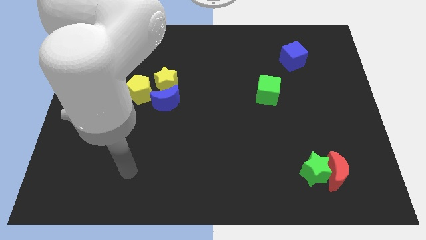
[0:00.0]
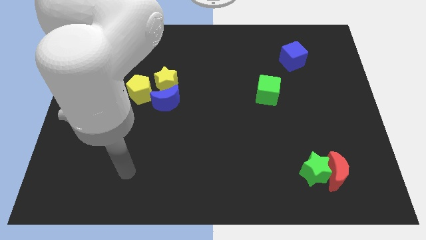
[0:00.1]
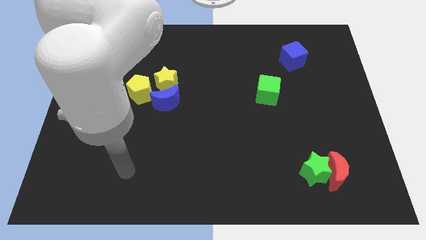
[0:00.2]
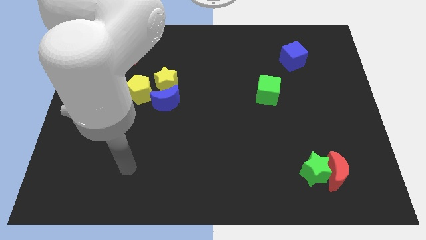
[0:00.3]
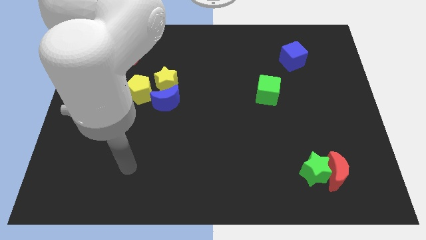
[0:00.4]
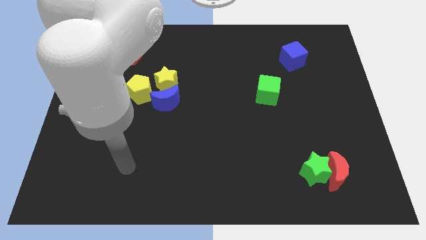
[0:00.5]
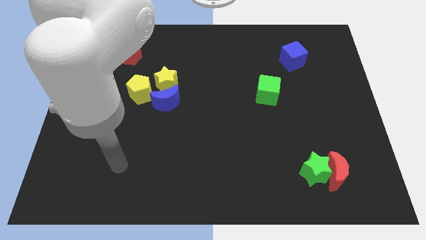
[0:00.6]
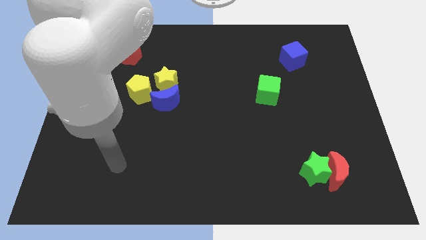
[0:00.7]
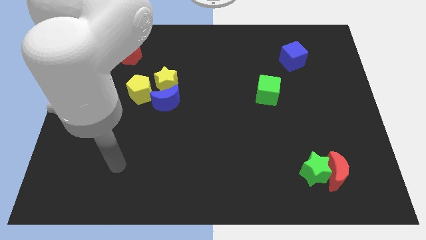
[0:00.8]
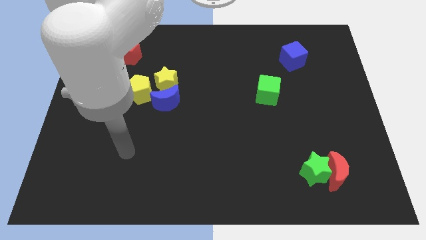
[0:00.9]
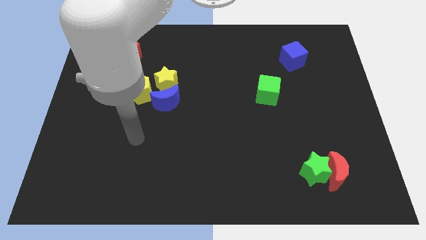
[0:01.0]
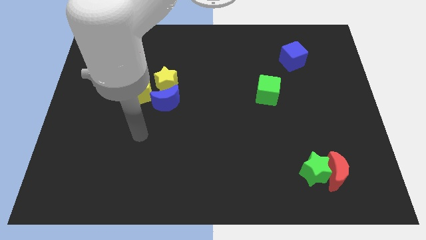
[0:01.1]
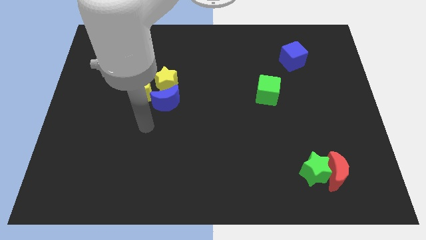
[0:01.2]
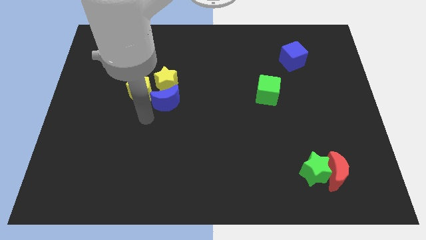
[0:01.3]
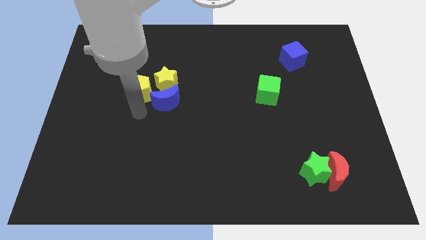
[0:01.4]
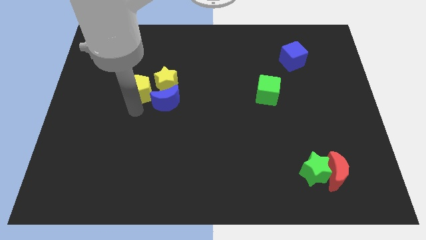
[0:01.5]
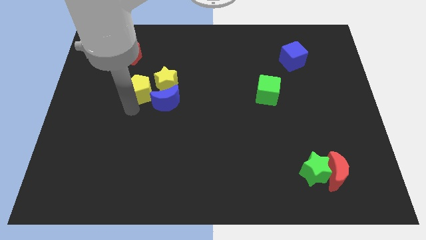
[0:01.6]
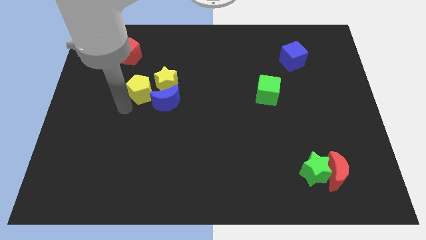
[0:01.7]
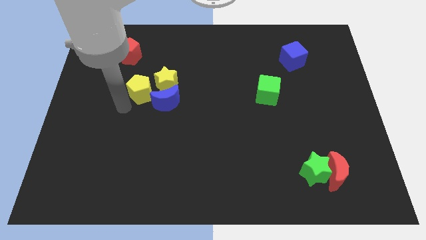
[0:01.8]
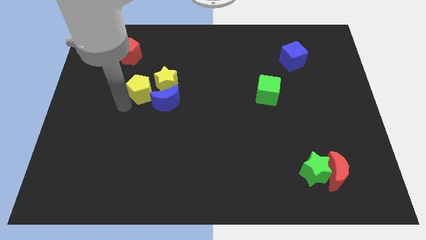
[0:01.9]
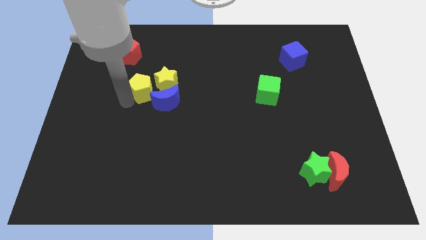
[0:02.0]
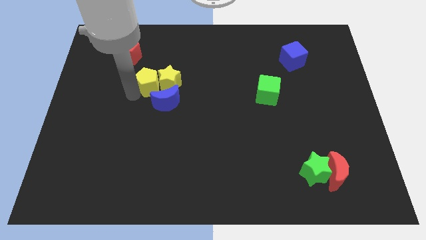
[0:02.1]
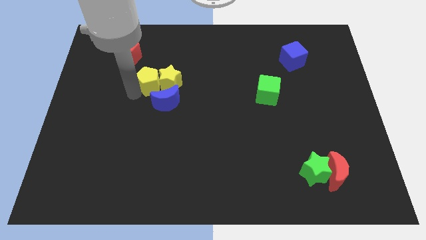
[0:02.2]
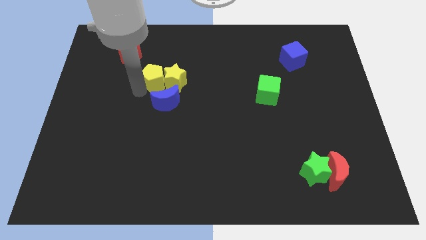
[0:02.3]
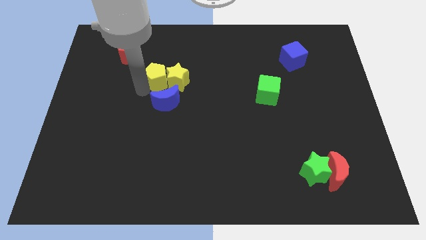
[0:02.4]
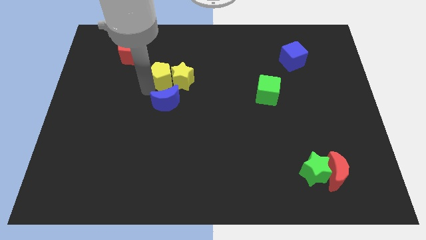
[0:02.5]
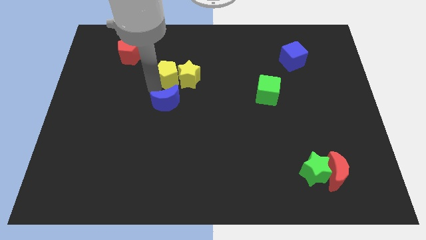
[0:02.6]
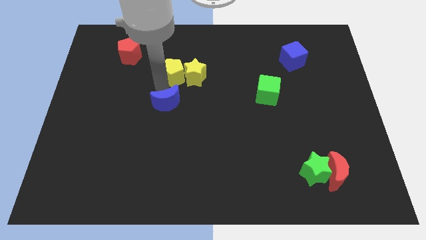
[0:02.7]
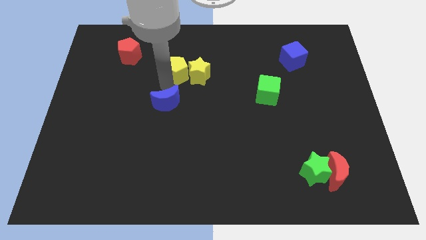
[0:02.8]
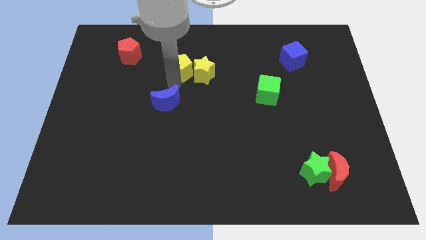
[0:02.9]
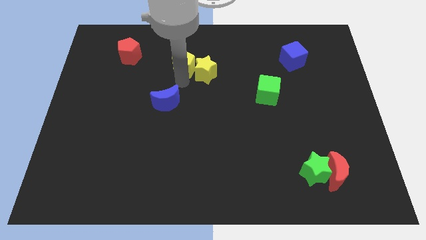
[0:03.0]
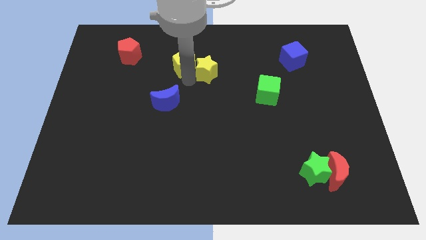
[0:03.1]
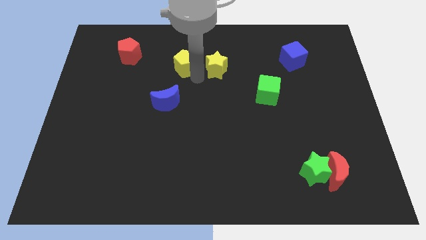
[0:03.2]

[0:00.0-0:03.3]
take the yellow pentagon and yellow star away from the blue moon

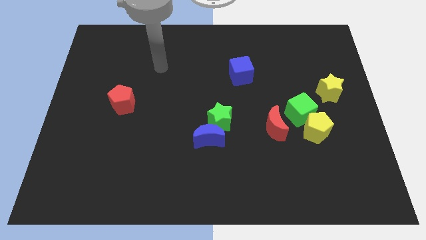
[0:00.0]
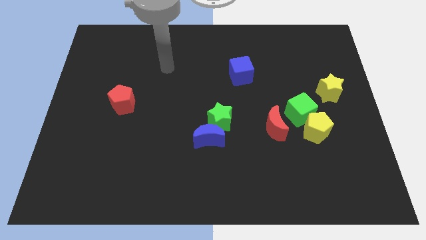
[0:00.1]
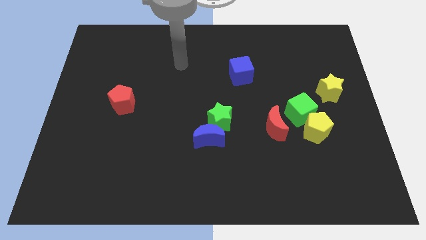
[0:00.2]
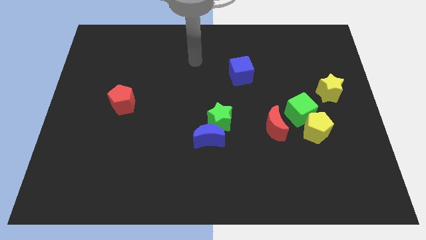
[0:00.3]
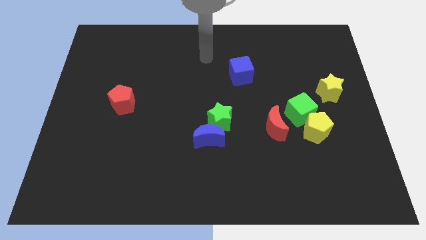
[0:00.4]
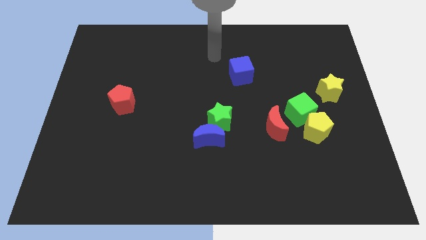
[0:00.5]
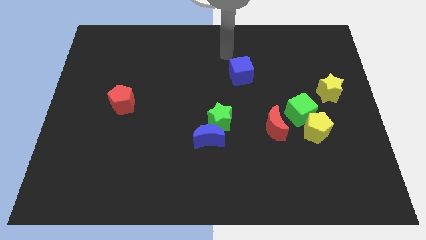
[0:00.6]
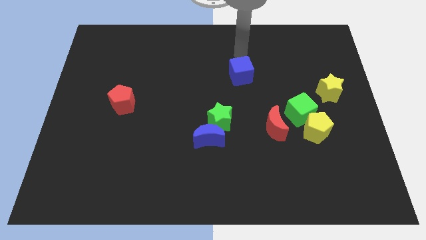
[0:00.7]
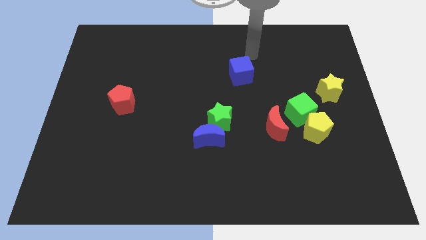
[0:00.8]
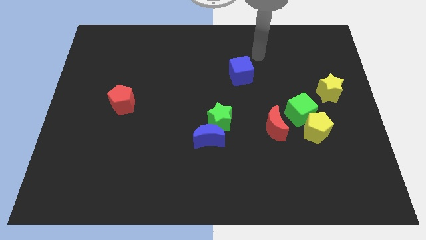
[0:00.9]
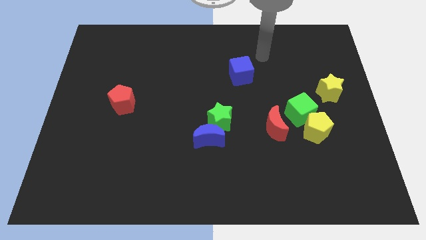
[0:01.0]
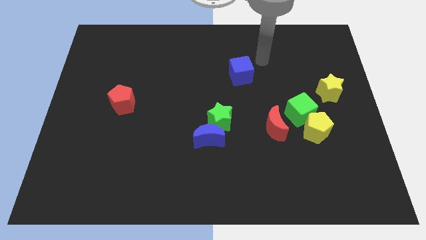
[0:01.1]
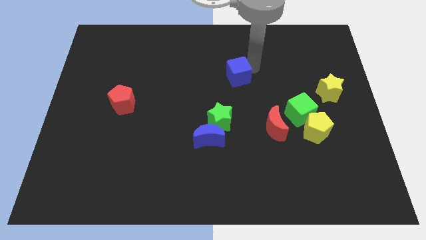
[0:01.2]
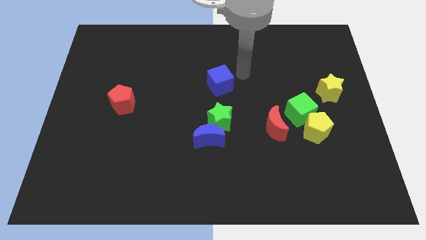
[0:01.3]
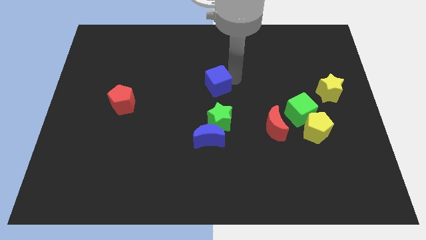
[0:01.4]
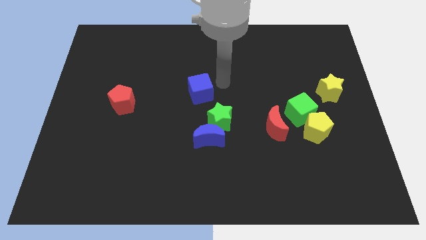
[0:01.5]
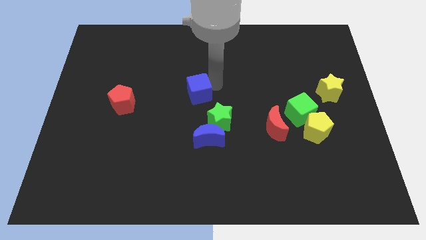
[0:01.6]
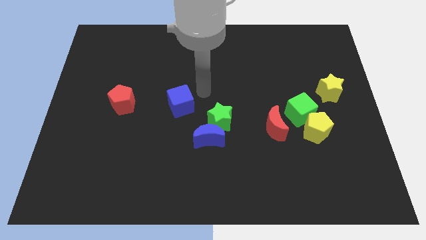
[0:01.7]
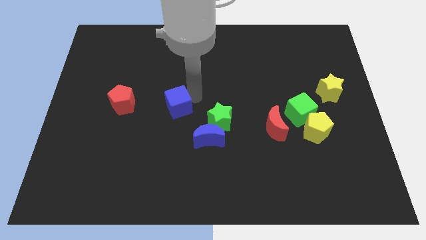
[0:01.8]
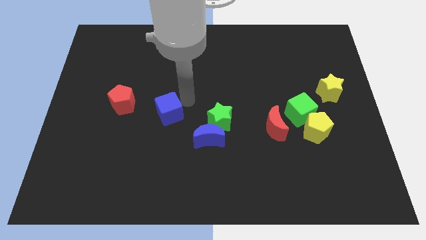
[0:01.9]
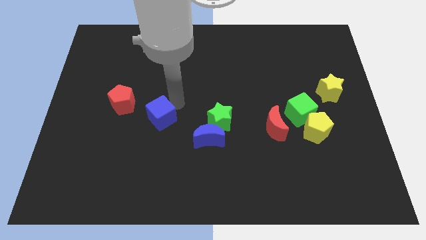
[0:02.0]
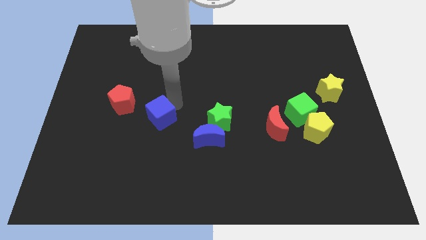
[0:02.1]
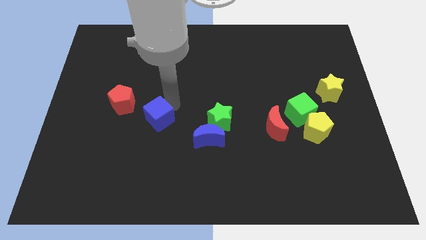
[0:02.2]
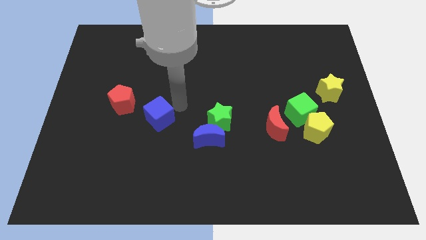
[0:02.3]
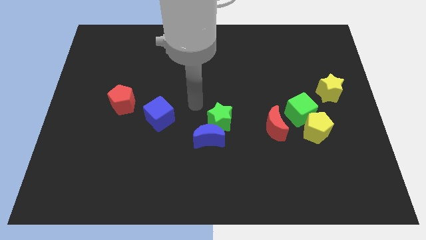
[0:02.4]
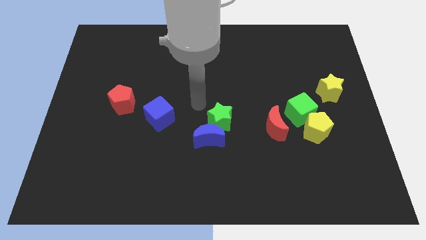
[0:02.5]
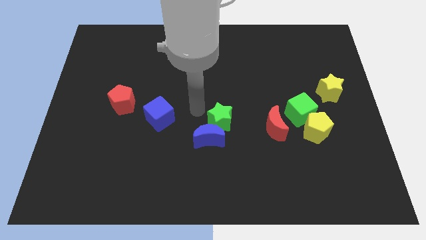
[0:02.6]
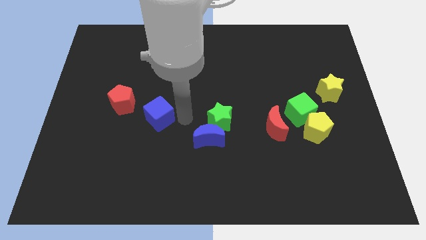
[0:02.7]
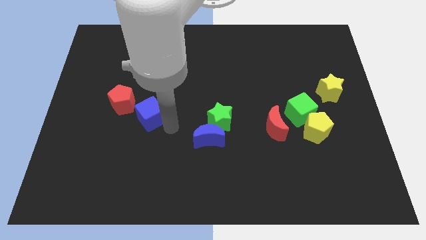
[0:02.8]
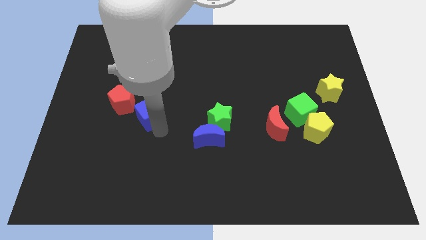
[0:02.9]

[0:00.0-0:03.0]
move blue cube right beside the red pentagon

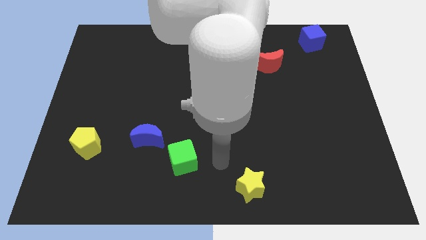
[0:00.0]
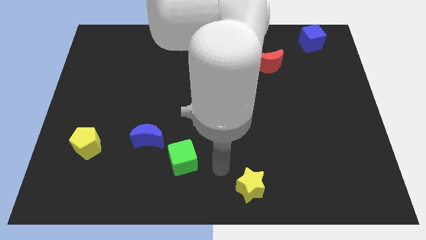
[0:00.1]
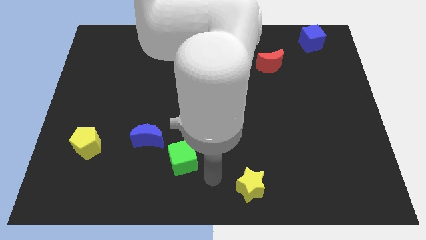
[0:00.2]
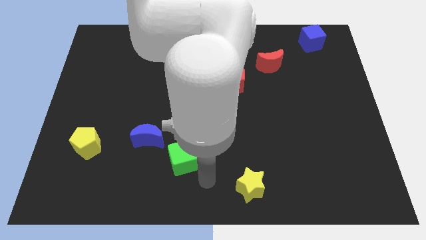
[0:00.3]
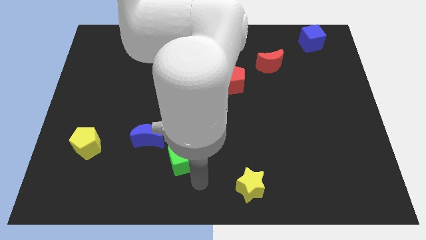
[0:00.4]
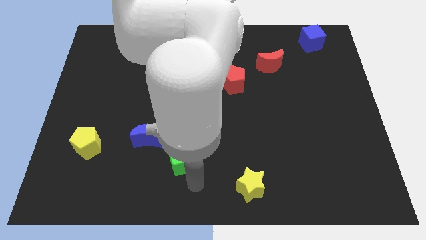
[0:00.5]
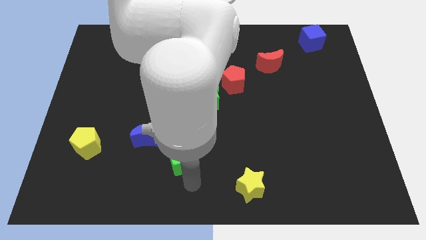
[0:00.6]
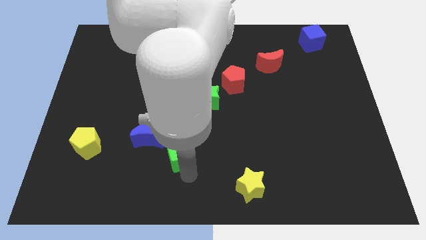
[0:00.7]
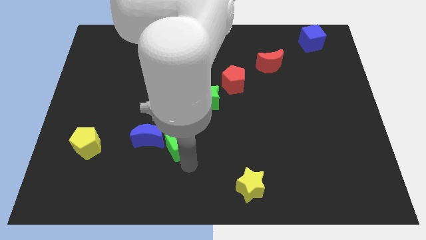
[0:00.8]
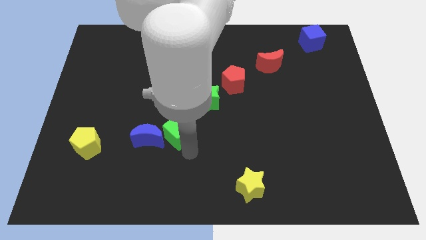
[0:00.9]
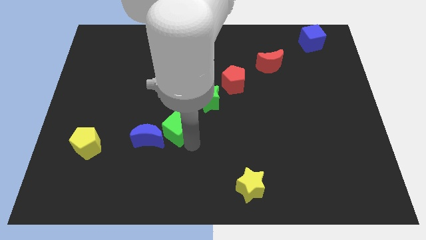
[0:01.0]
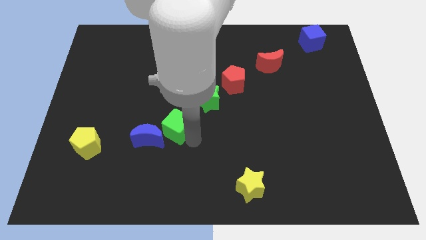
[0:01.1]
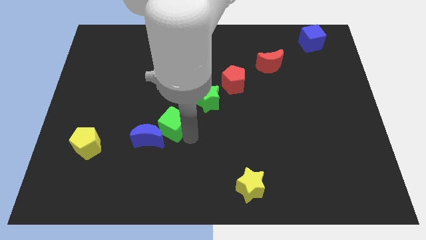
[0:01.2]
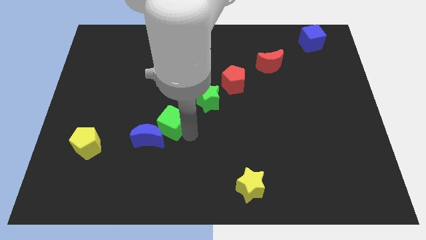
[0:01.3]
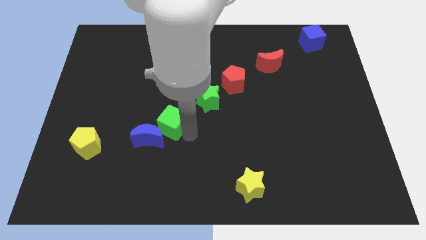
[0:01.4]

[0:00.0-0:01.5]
place the green cube between green star and blue crescent

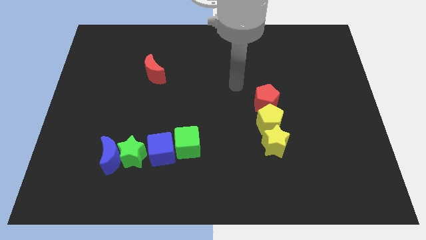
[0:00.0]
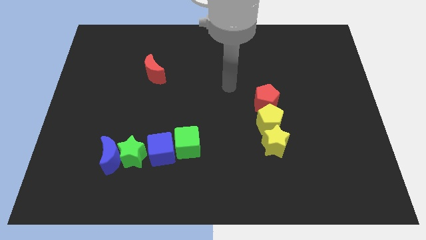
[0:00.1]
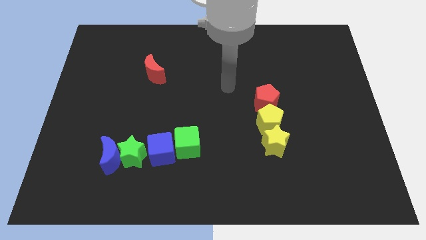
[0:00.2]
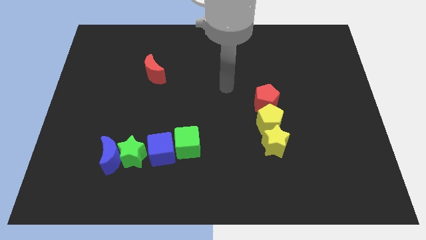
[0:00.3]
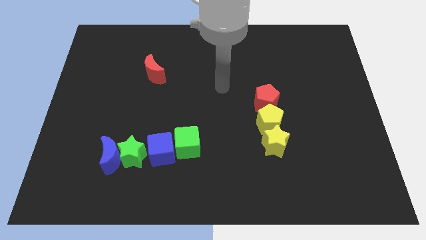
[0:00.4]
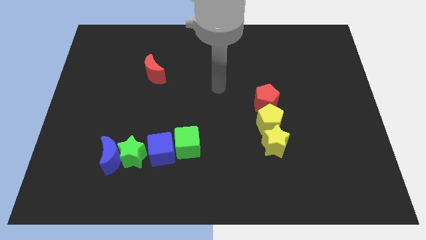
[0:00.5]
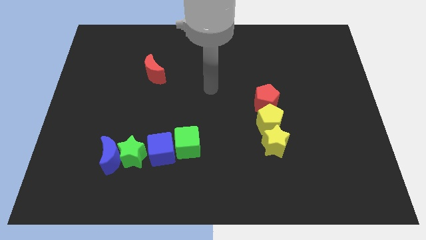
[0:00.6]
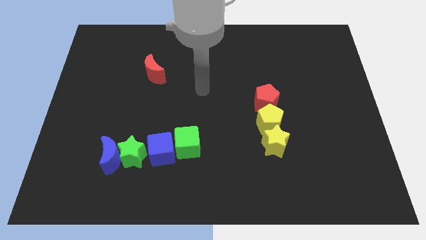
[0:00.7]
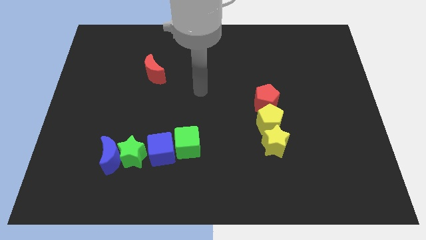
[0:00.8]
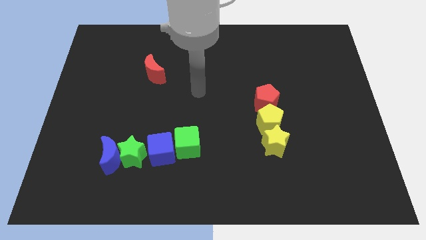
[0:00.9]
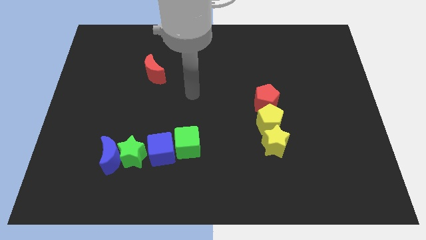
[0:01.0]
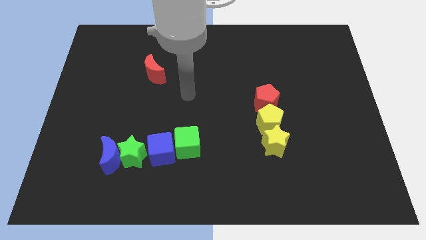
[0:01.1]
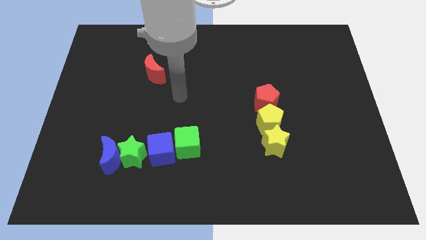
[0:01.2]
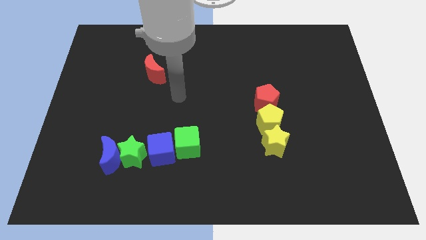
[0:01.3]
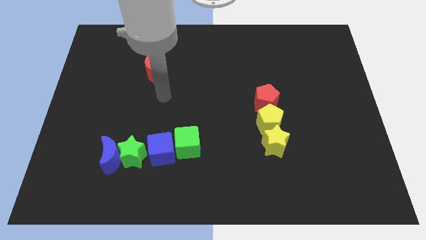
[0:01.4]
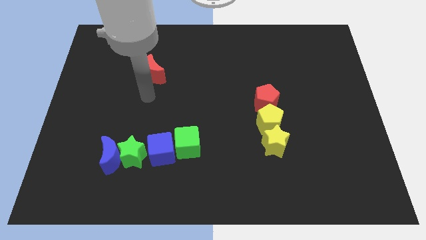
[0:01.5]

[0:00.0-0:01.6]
move the arm to the bottom of the red crescent
